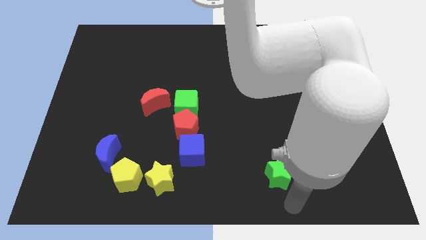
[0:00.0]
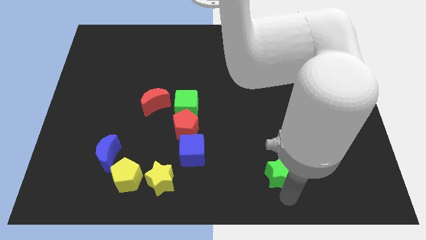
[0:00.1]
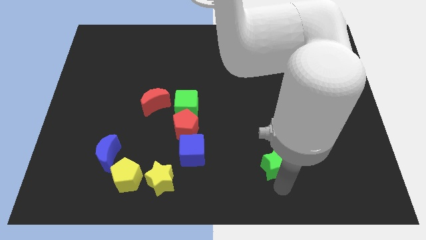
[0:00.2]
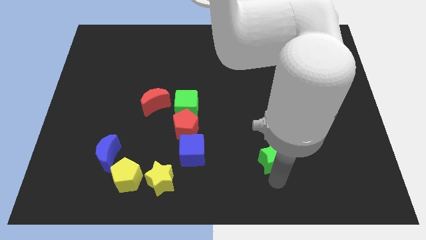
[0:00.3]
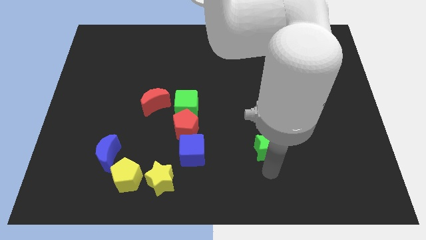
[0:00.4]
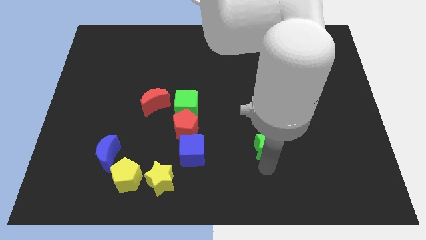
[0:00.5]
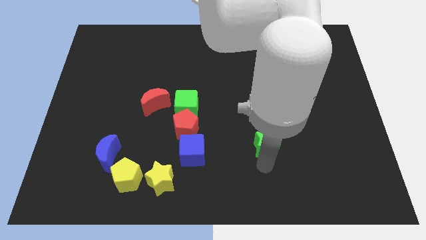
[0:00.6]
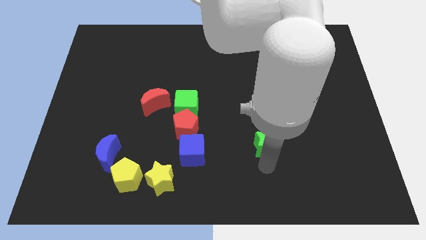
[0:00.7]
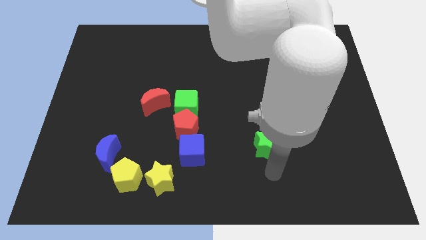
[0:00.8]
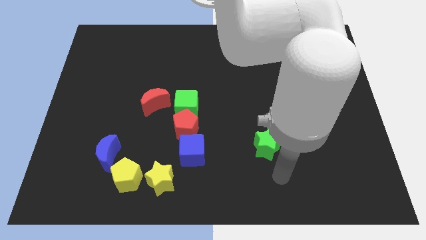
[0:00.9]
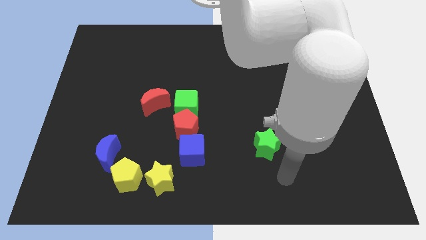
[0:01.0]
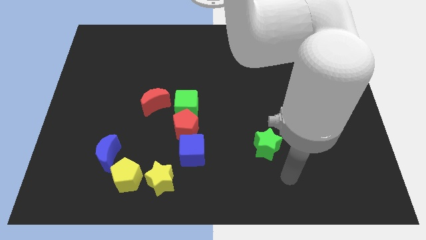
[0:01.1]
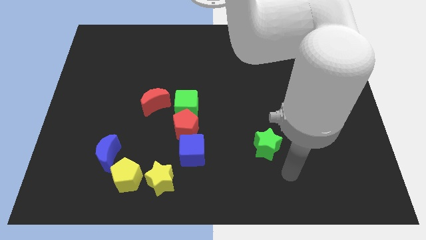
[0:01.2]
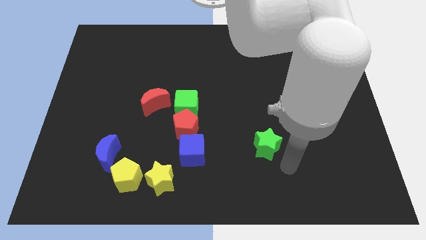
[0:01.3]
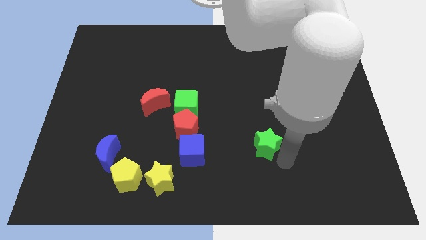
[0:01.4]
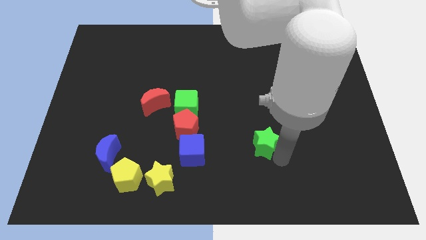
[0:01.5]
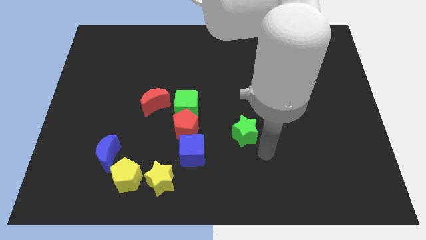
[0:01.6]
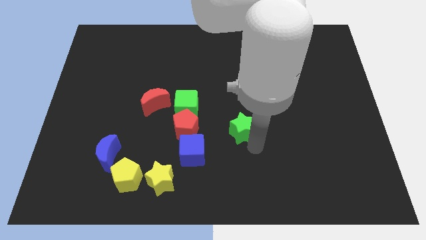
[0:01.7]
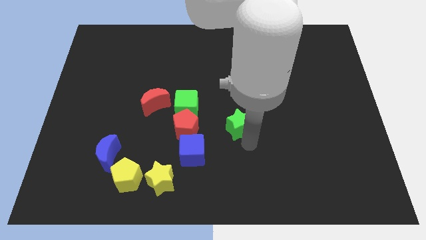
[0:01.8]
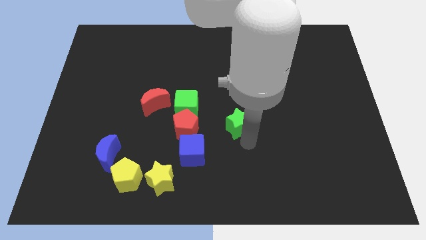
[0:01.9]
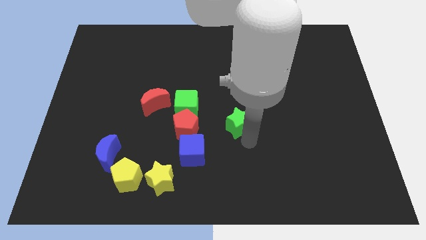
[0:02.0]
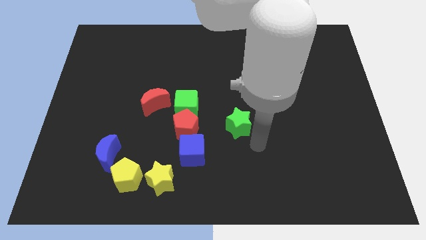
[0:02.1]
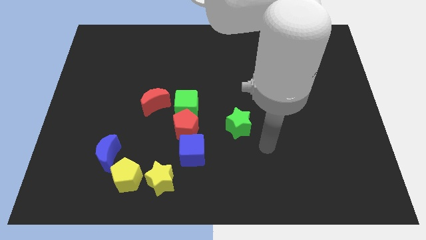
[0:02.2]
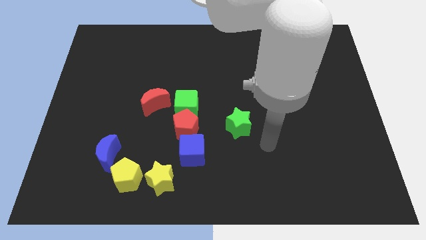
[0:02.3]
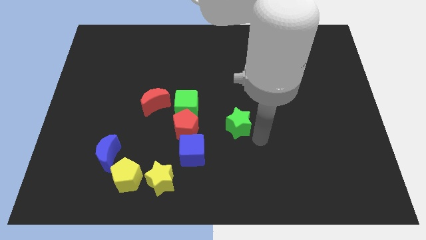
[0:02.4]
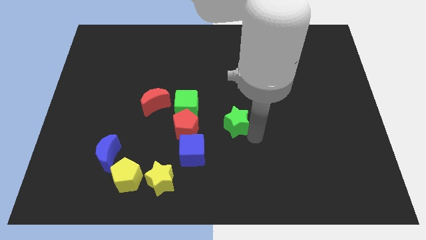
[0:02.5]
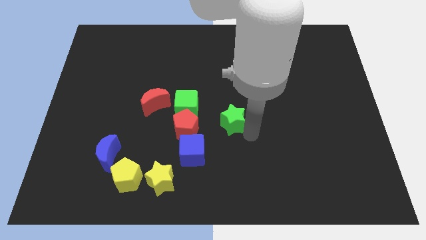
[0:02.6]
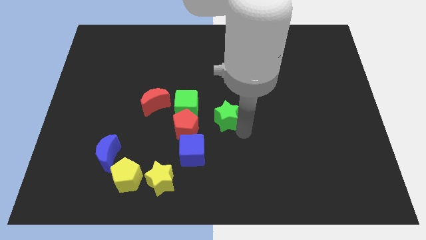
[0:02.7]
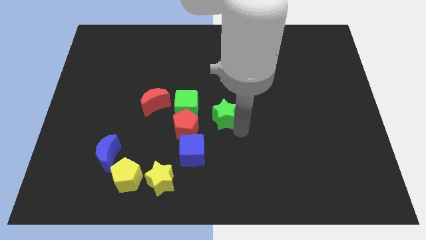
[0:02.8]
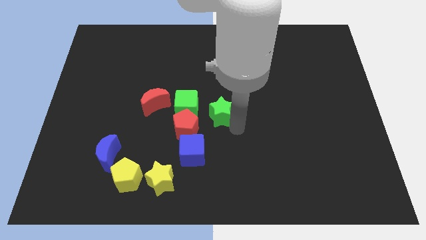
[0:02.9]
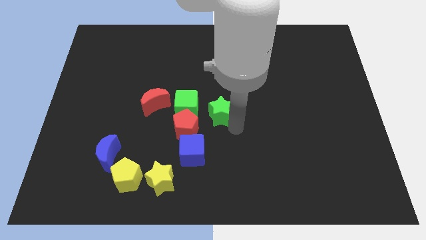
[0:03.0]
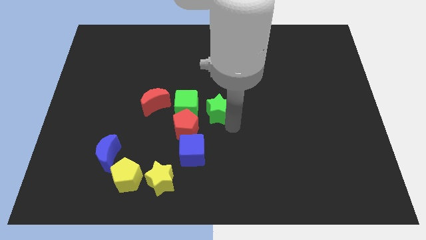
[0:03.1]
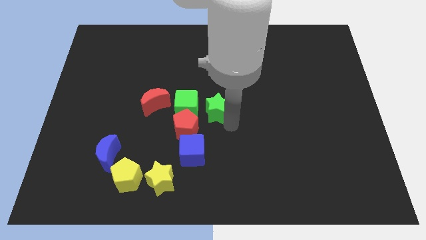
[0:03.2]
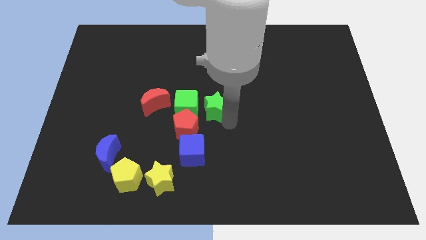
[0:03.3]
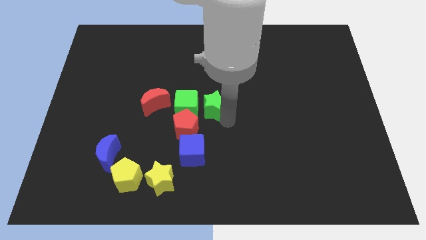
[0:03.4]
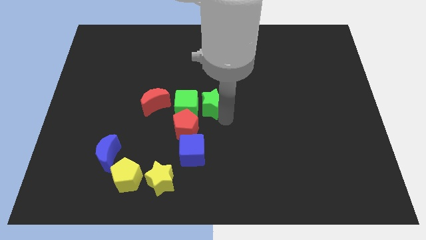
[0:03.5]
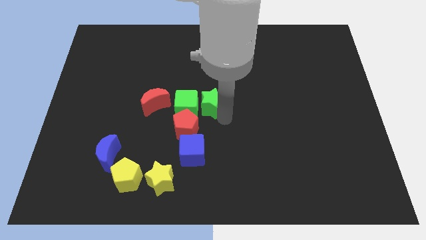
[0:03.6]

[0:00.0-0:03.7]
move green star to the right side of the green cube

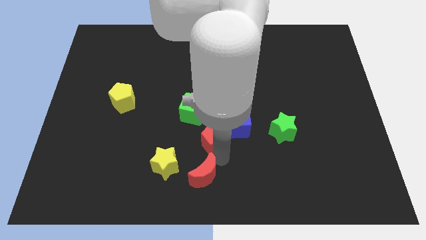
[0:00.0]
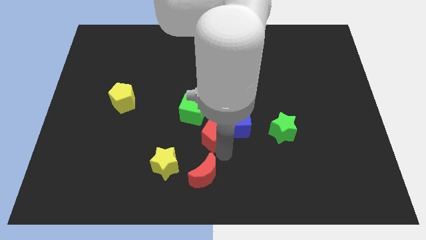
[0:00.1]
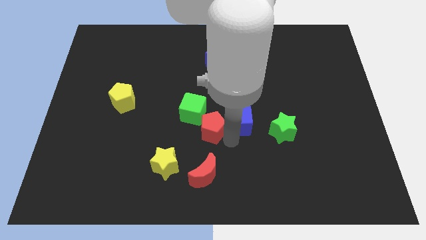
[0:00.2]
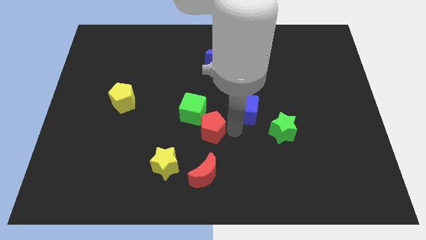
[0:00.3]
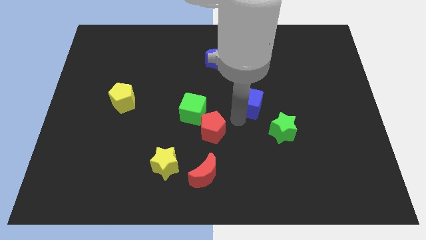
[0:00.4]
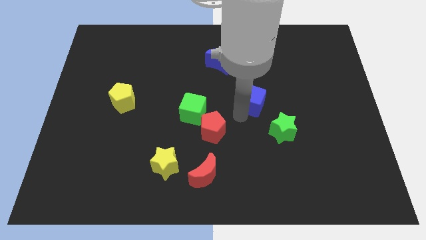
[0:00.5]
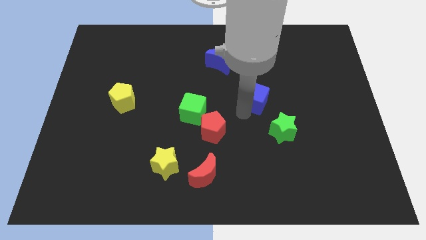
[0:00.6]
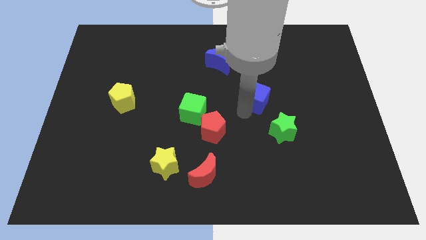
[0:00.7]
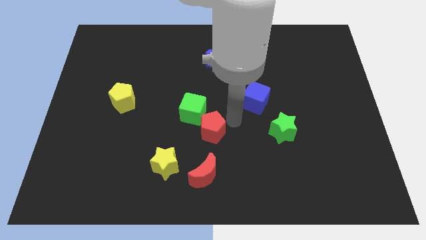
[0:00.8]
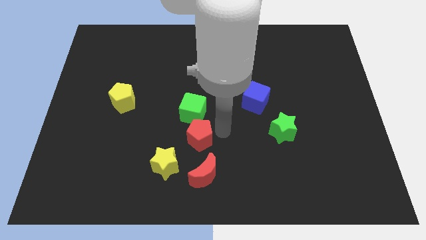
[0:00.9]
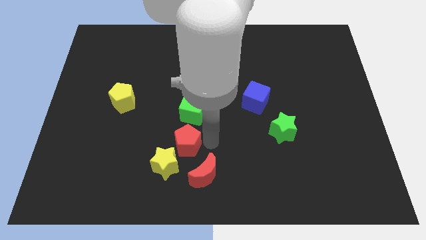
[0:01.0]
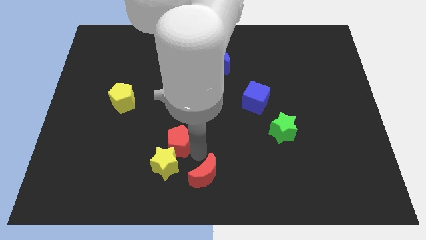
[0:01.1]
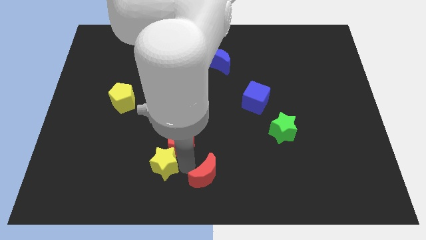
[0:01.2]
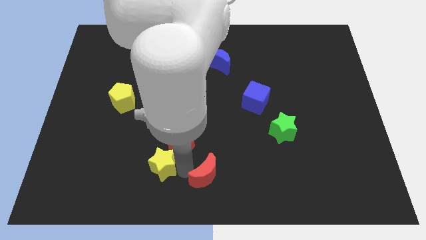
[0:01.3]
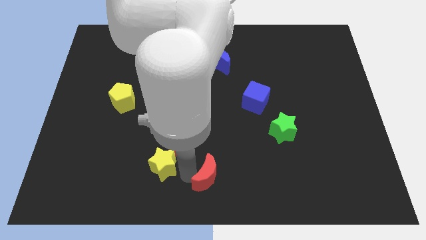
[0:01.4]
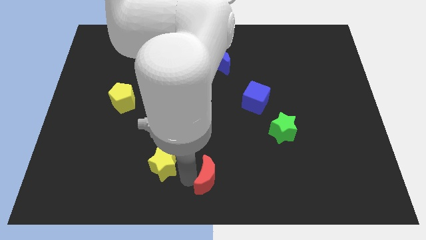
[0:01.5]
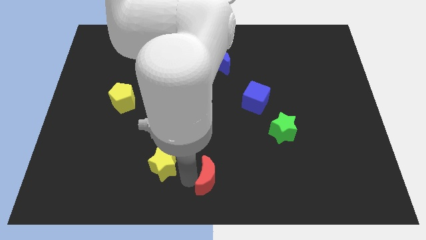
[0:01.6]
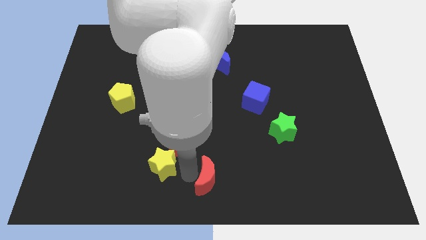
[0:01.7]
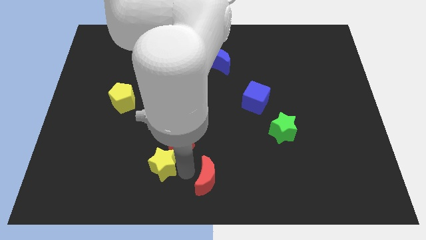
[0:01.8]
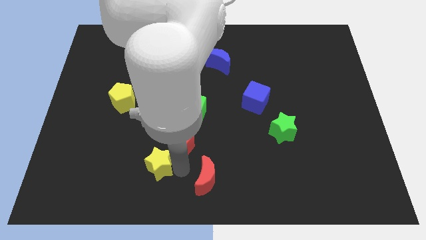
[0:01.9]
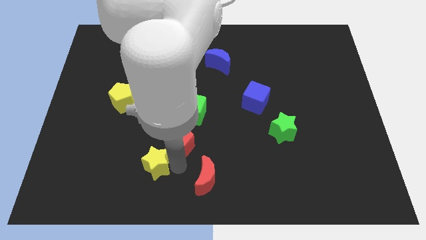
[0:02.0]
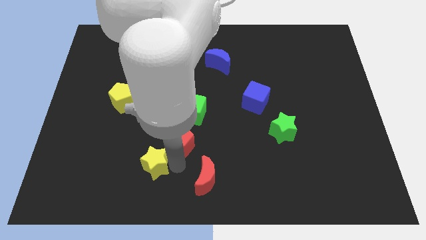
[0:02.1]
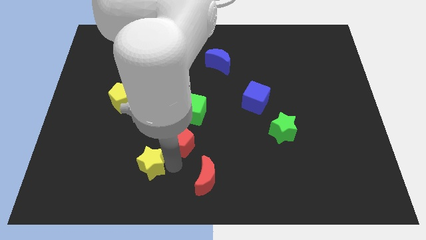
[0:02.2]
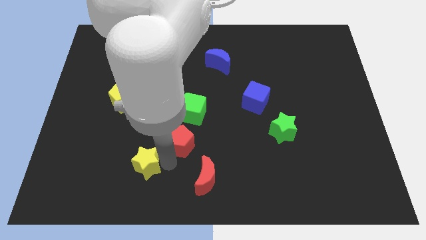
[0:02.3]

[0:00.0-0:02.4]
push blue cube to the top left of green star

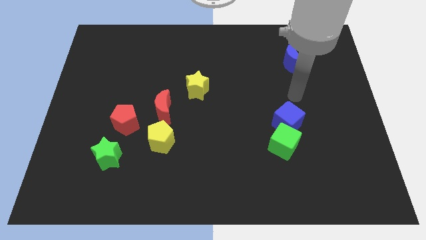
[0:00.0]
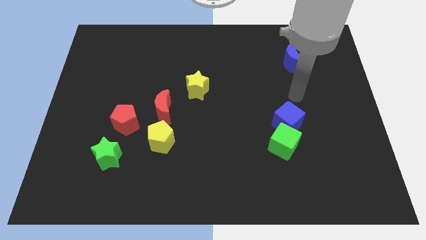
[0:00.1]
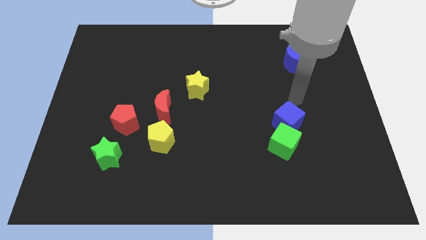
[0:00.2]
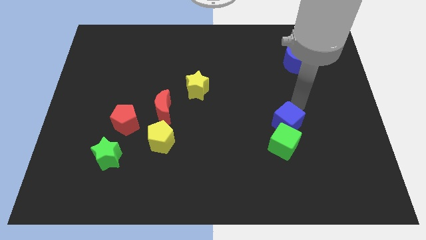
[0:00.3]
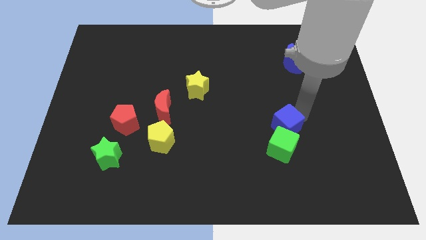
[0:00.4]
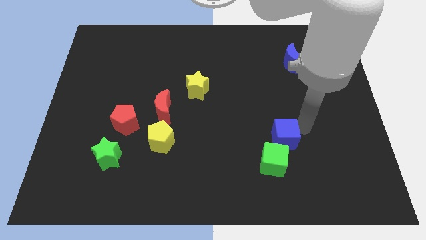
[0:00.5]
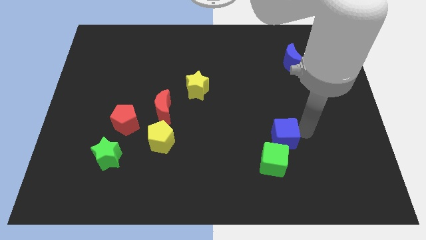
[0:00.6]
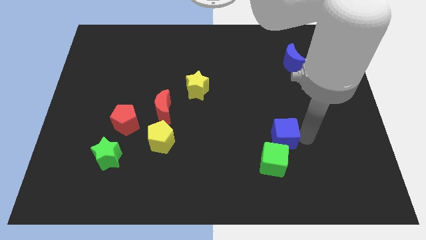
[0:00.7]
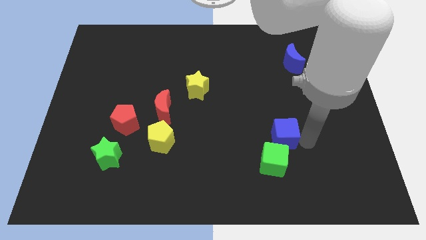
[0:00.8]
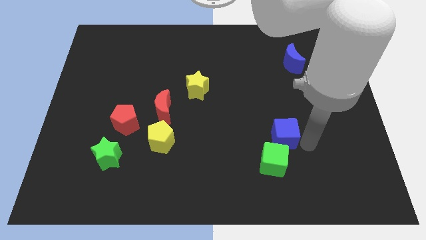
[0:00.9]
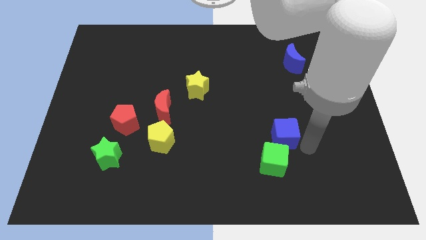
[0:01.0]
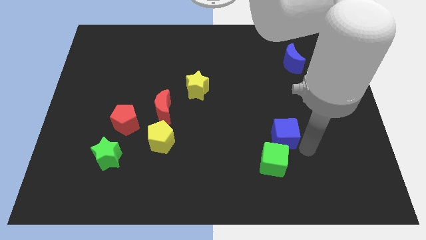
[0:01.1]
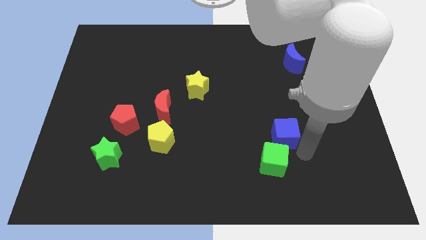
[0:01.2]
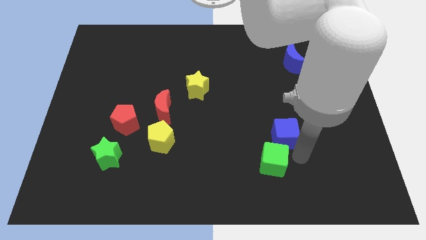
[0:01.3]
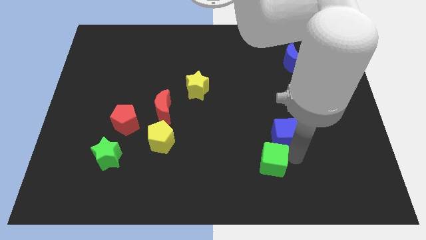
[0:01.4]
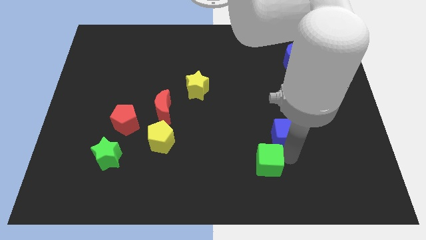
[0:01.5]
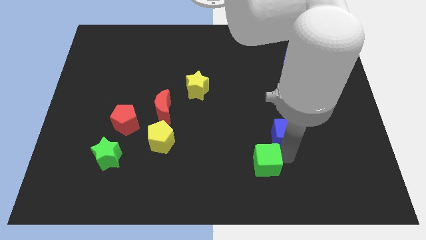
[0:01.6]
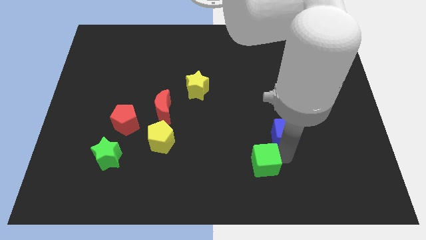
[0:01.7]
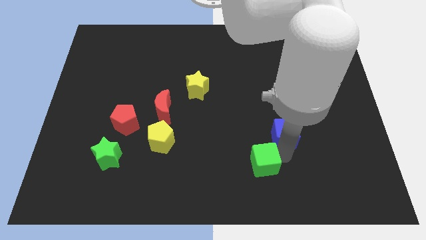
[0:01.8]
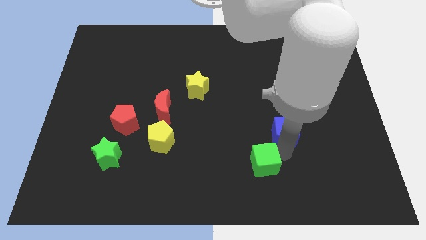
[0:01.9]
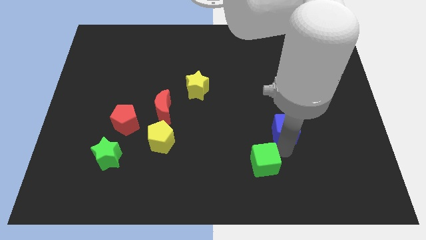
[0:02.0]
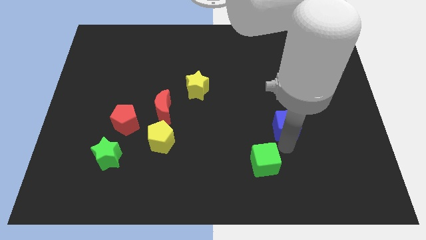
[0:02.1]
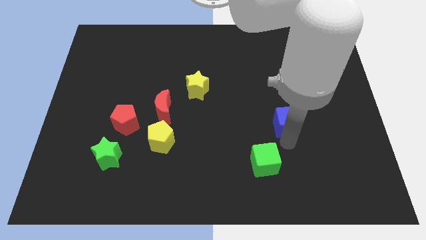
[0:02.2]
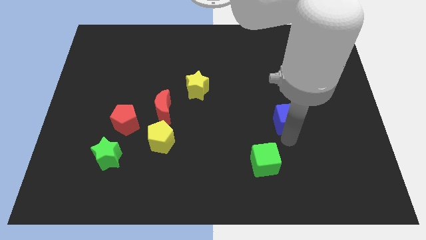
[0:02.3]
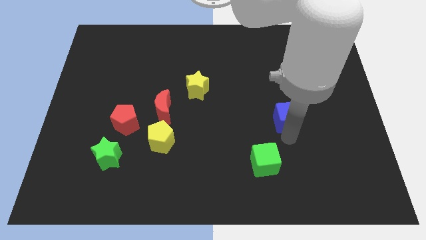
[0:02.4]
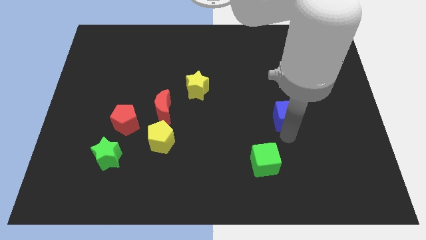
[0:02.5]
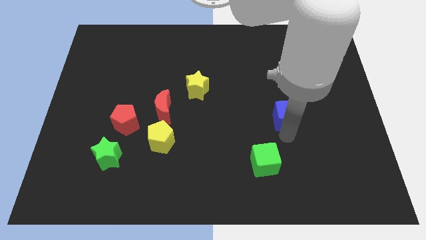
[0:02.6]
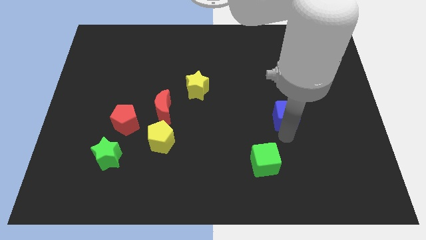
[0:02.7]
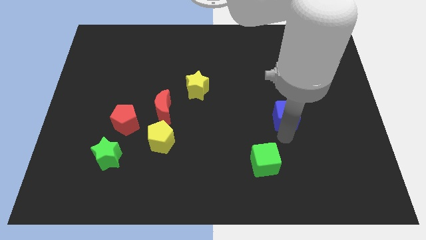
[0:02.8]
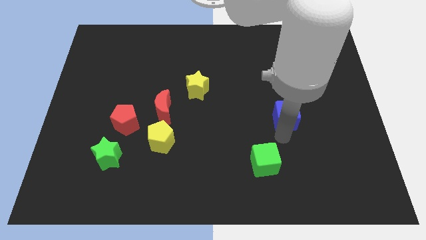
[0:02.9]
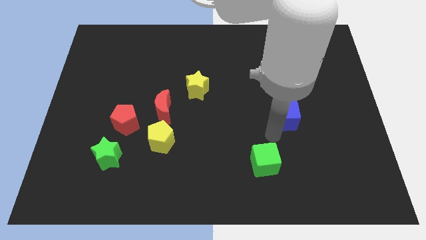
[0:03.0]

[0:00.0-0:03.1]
separate the blue cube from the green cube
